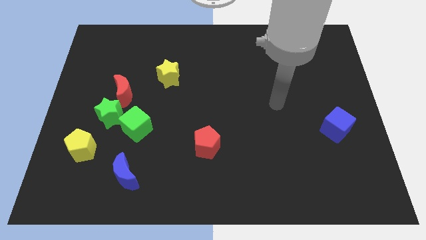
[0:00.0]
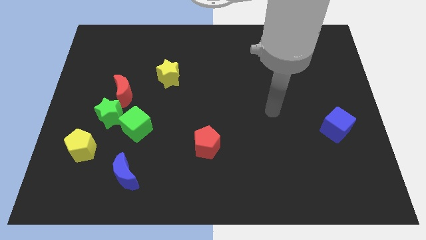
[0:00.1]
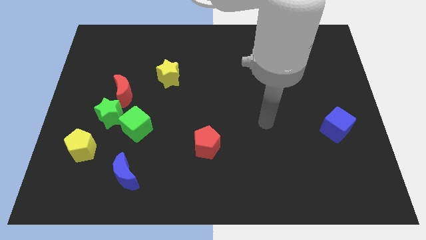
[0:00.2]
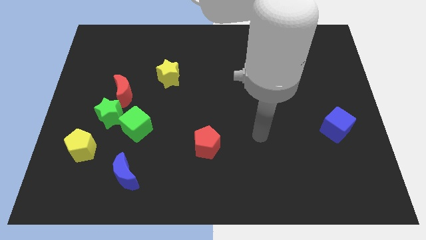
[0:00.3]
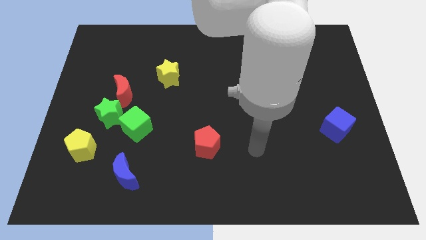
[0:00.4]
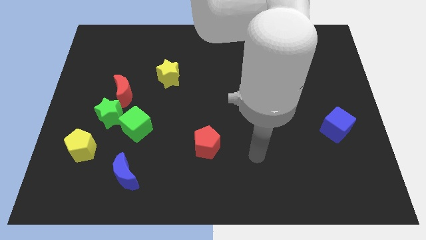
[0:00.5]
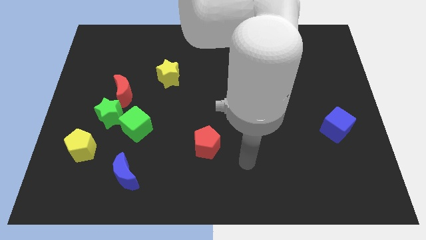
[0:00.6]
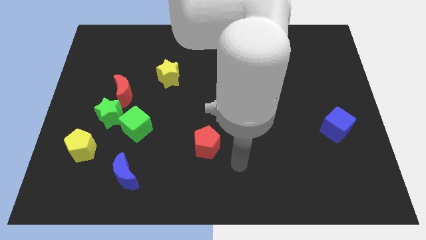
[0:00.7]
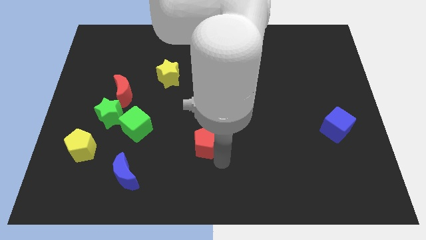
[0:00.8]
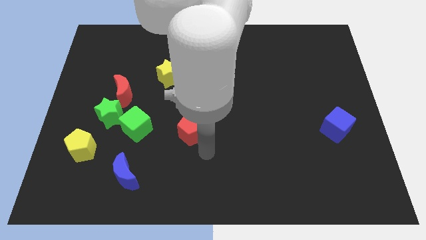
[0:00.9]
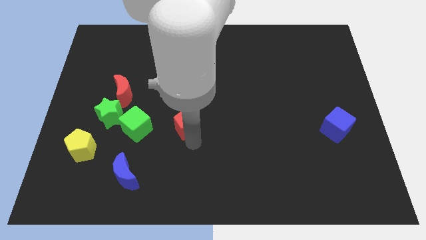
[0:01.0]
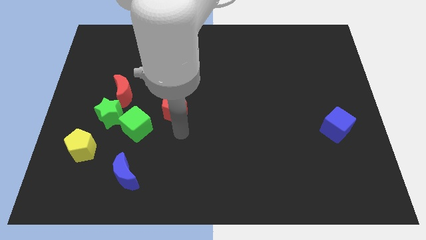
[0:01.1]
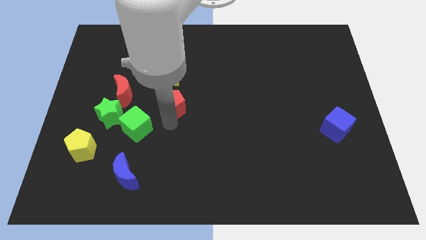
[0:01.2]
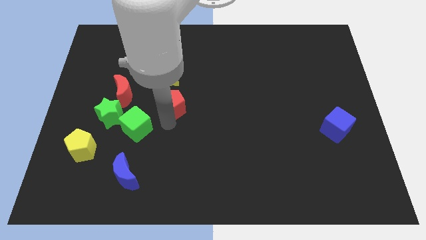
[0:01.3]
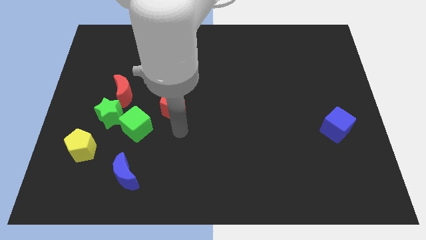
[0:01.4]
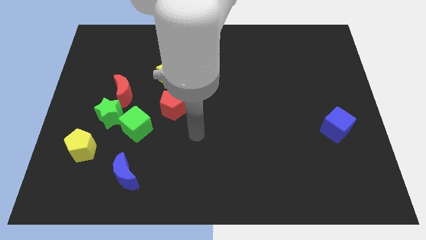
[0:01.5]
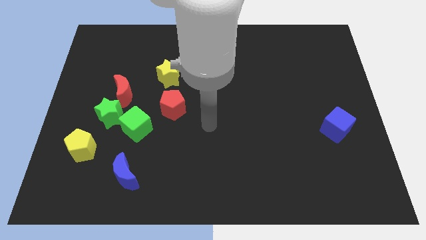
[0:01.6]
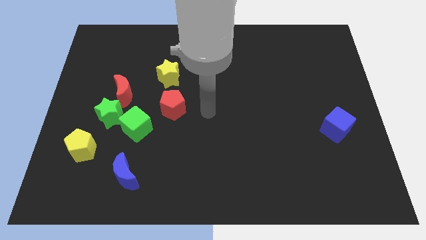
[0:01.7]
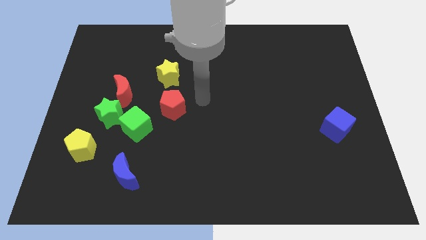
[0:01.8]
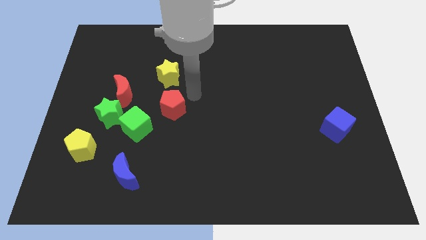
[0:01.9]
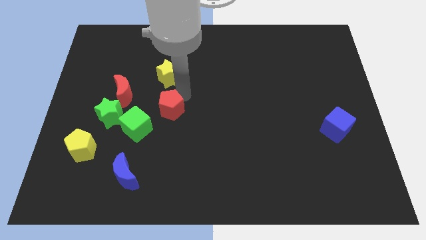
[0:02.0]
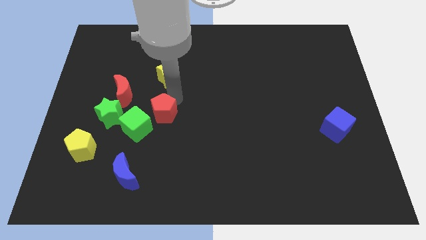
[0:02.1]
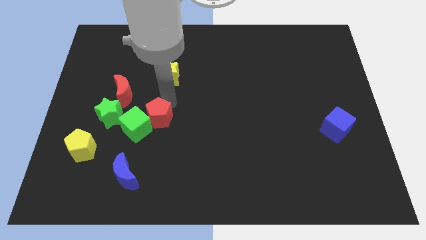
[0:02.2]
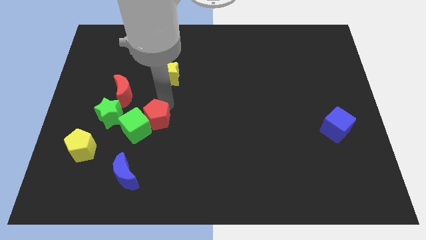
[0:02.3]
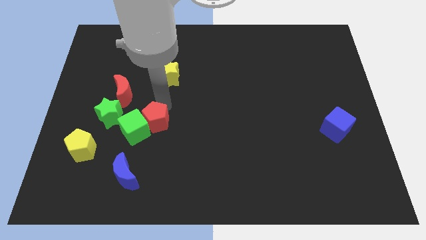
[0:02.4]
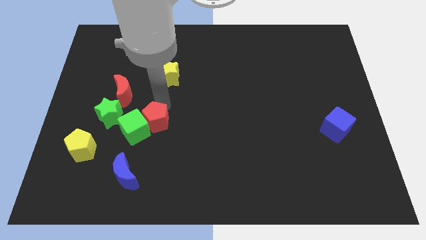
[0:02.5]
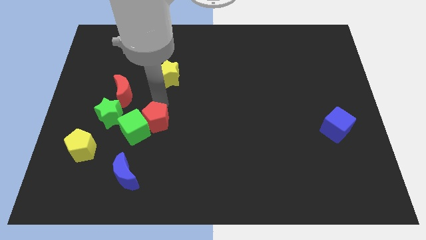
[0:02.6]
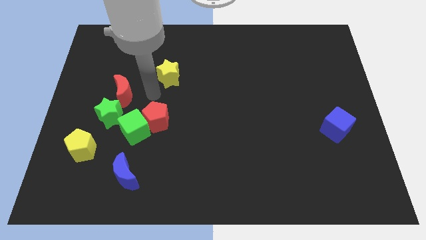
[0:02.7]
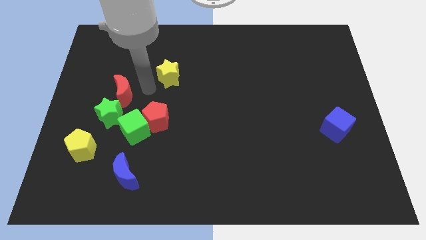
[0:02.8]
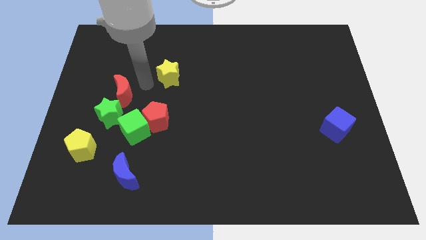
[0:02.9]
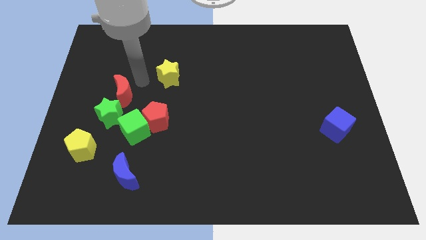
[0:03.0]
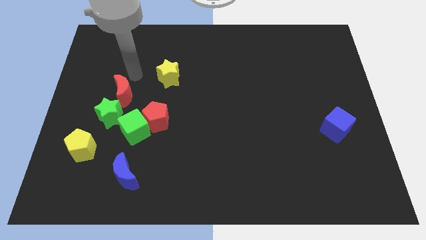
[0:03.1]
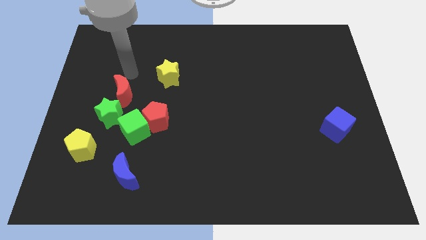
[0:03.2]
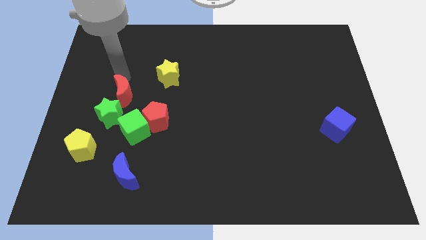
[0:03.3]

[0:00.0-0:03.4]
push the red pentagon into the green cube

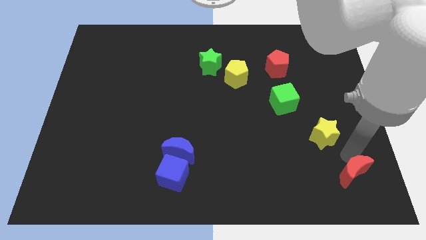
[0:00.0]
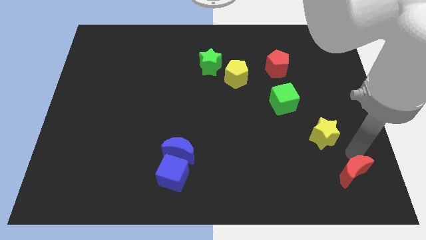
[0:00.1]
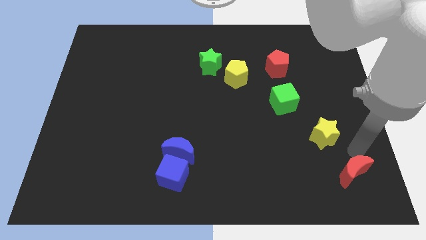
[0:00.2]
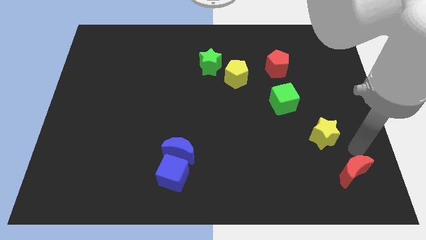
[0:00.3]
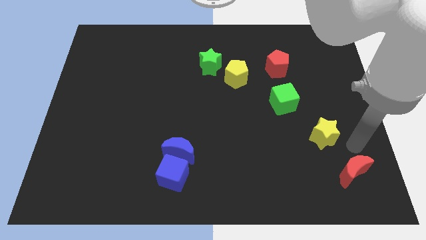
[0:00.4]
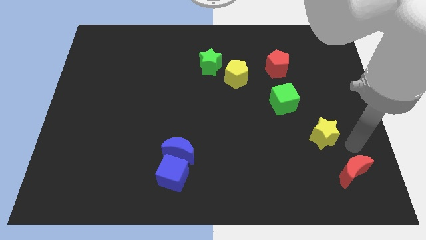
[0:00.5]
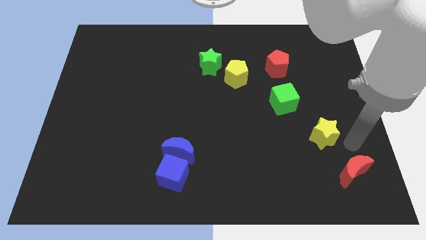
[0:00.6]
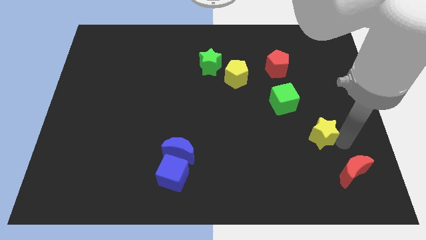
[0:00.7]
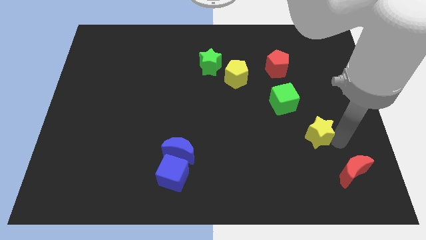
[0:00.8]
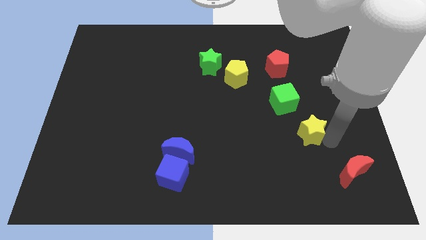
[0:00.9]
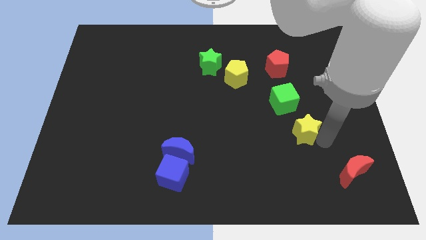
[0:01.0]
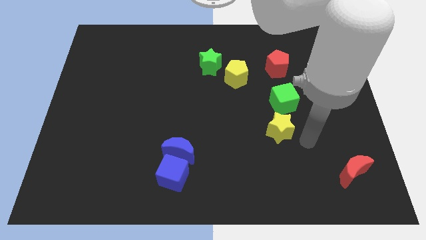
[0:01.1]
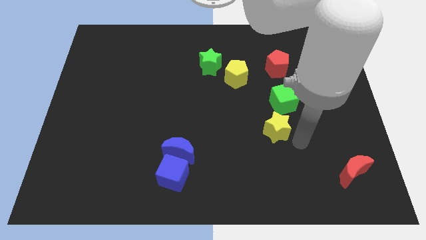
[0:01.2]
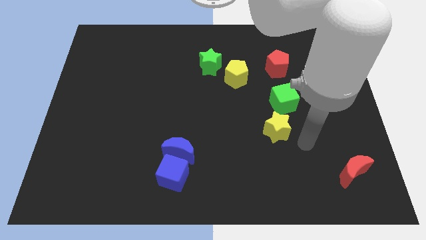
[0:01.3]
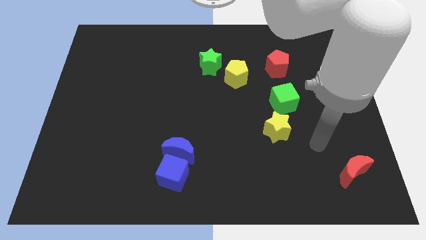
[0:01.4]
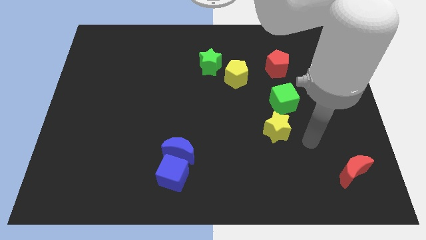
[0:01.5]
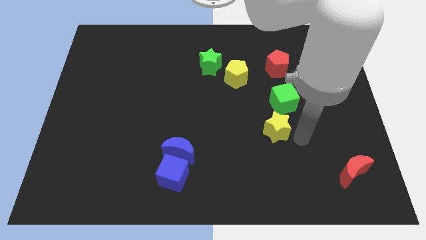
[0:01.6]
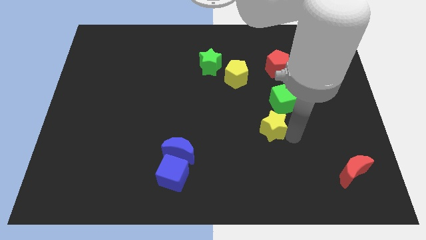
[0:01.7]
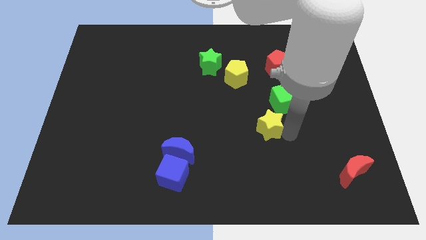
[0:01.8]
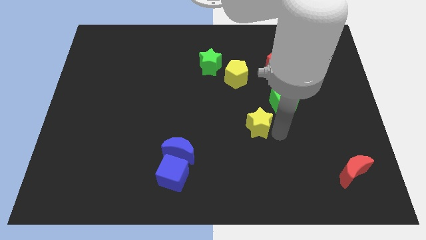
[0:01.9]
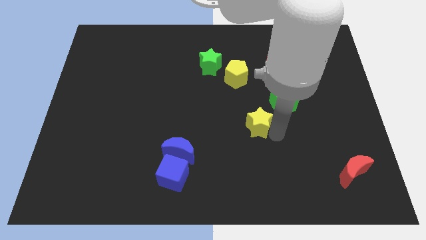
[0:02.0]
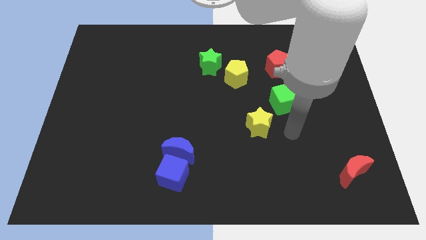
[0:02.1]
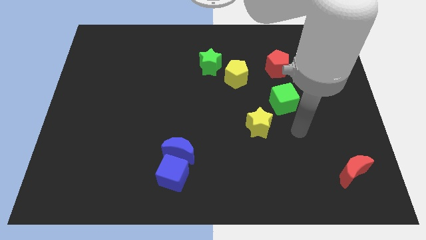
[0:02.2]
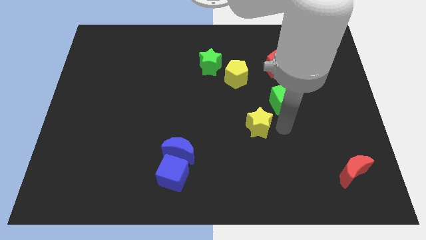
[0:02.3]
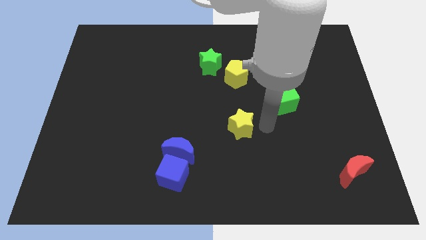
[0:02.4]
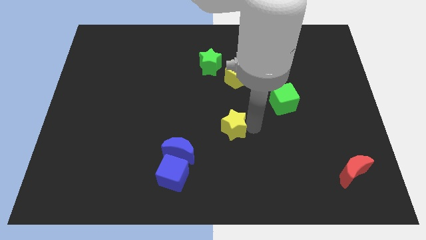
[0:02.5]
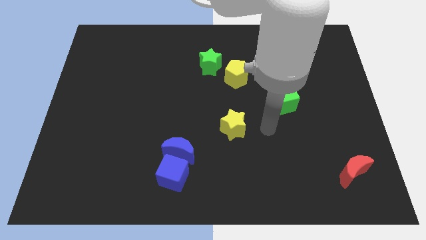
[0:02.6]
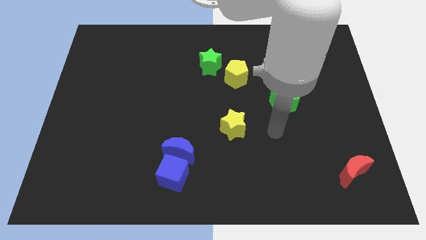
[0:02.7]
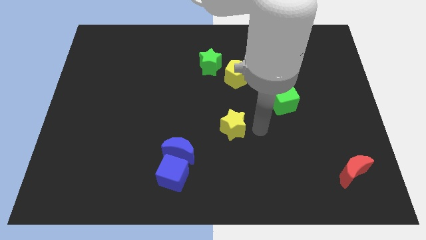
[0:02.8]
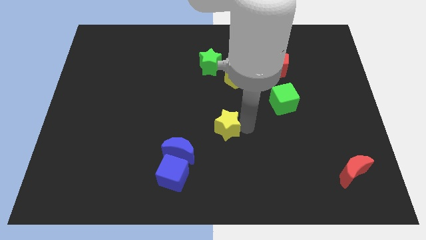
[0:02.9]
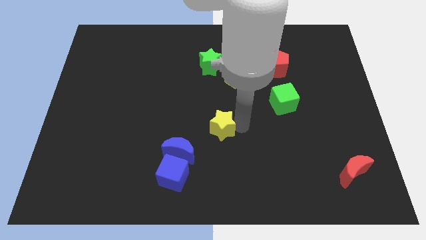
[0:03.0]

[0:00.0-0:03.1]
push the yellow star to the top right of the blue crescent

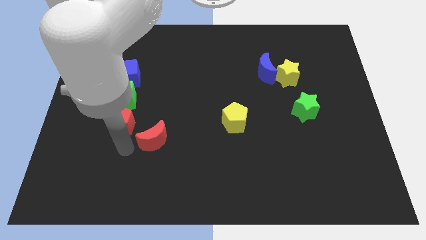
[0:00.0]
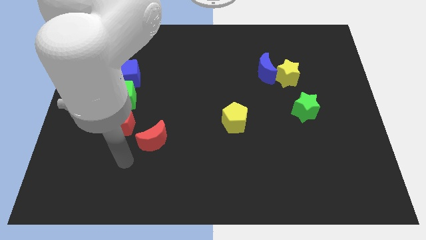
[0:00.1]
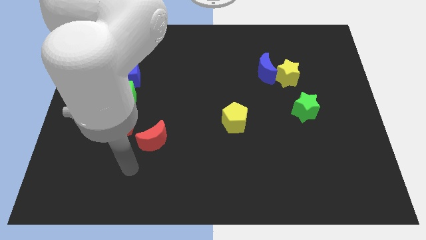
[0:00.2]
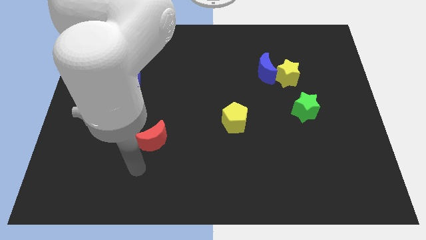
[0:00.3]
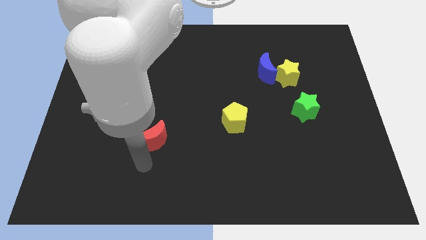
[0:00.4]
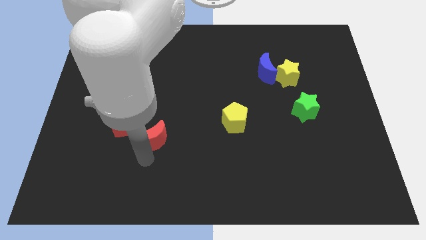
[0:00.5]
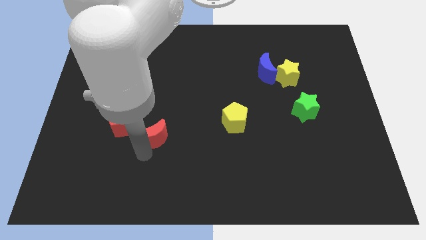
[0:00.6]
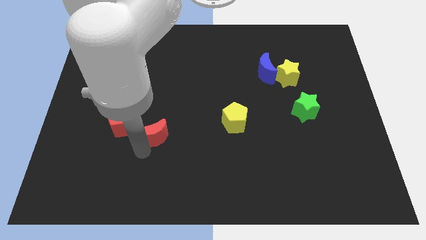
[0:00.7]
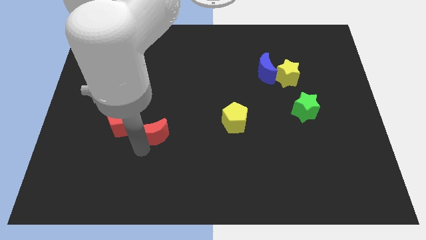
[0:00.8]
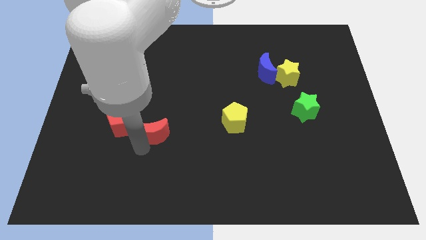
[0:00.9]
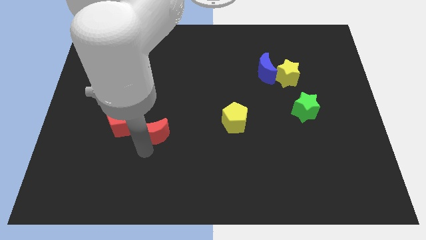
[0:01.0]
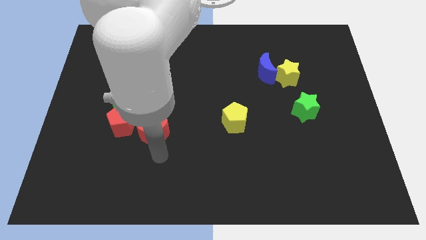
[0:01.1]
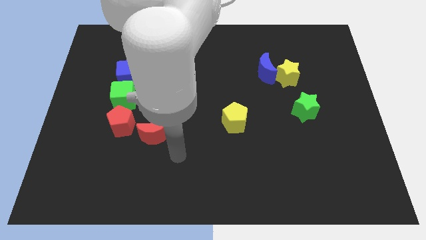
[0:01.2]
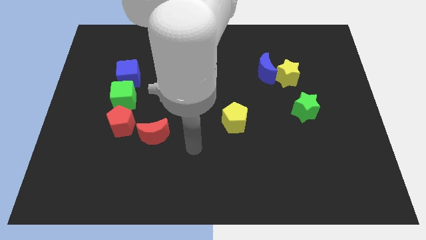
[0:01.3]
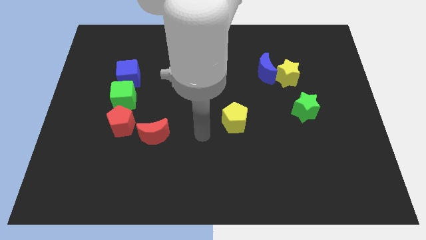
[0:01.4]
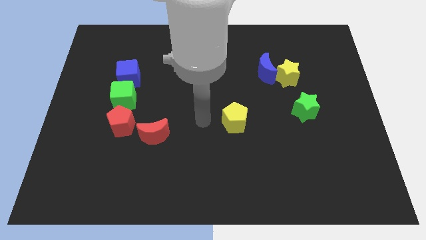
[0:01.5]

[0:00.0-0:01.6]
place red moon to the right of red pentagon

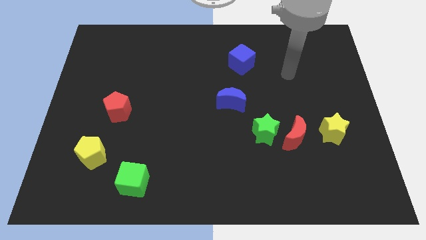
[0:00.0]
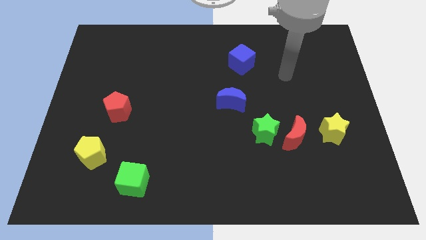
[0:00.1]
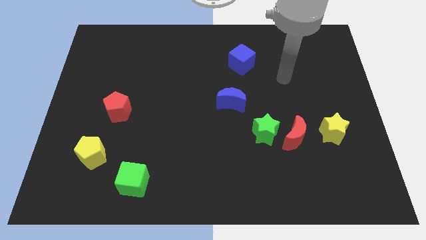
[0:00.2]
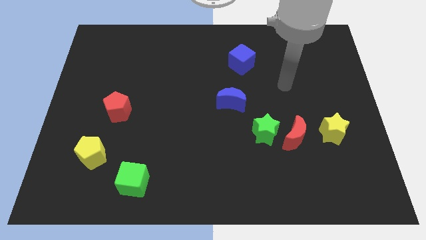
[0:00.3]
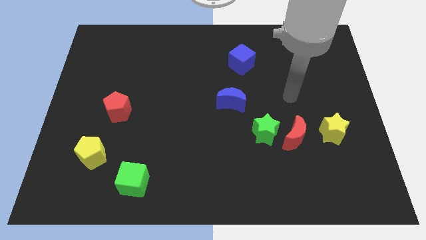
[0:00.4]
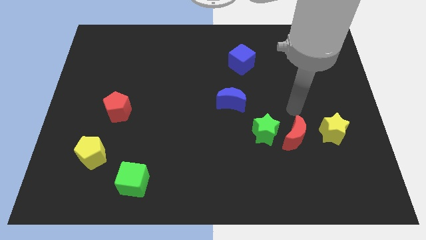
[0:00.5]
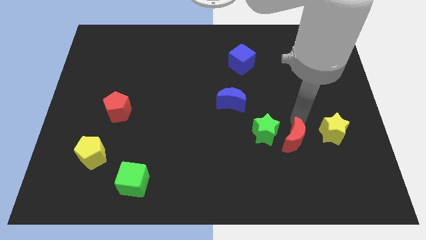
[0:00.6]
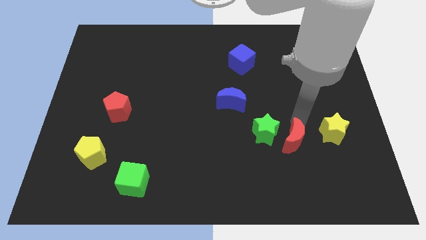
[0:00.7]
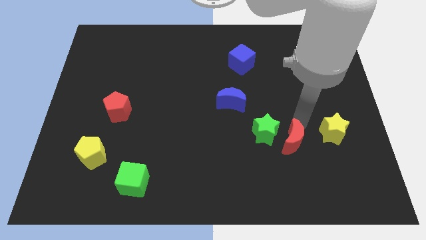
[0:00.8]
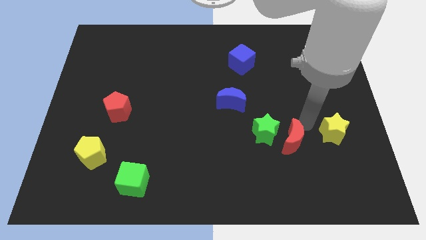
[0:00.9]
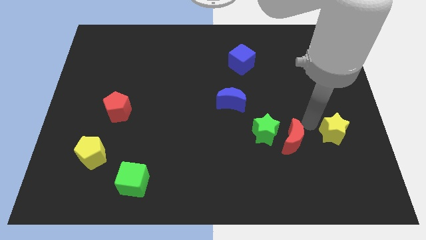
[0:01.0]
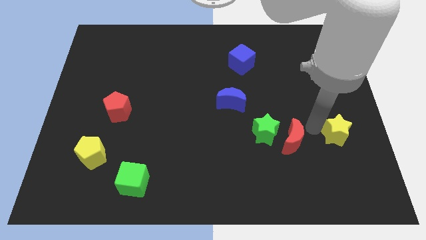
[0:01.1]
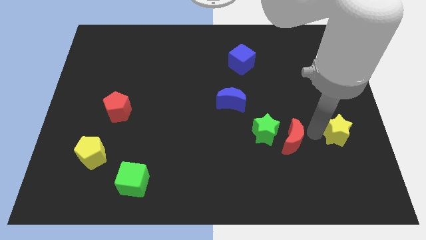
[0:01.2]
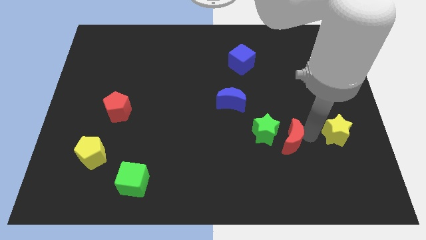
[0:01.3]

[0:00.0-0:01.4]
touch the yellow star
